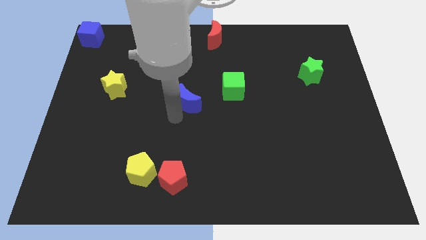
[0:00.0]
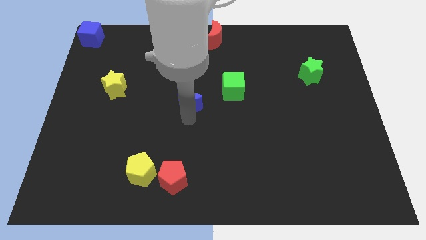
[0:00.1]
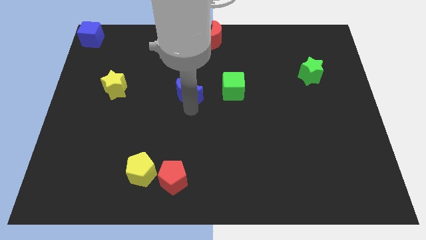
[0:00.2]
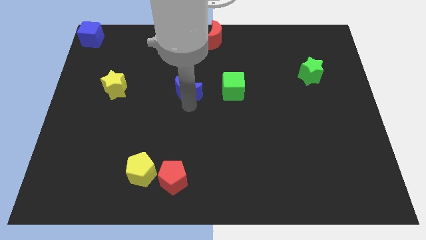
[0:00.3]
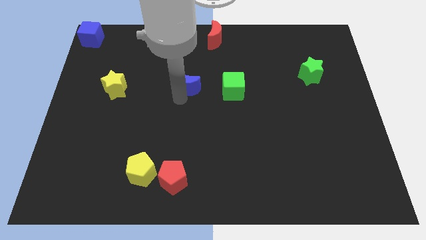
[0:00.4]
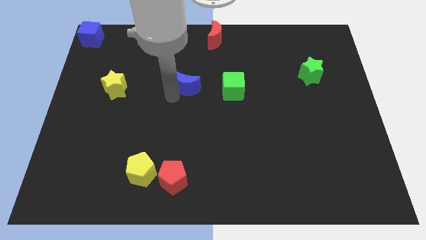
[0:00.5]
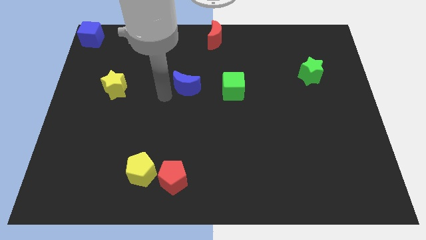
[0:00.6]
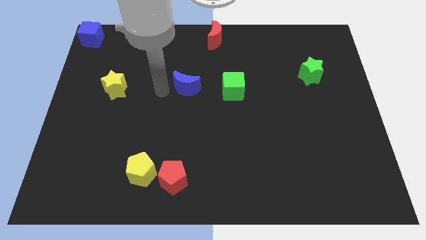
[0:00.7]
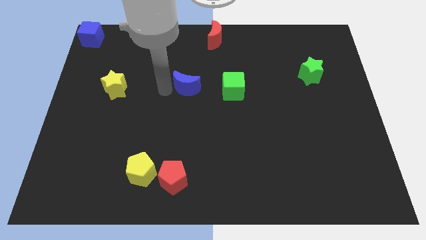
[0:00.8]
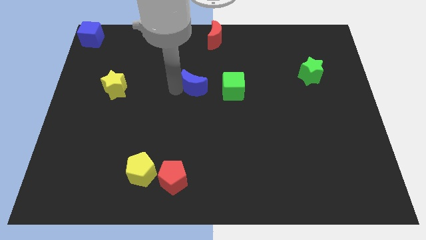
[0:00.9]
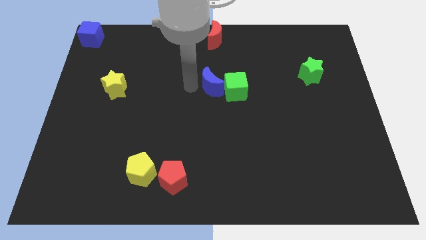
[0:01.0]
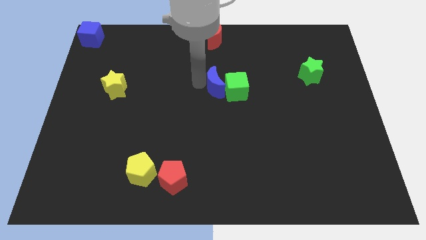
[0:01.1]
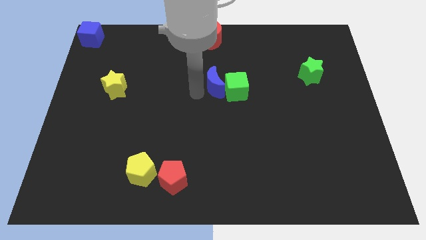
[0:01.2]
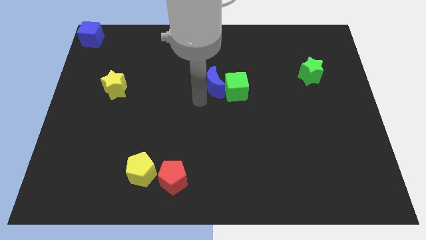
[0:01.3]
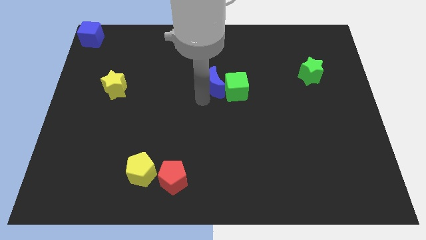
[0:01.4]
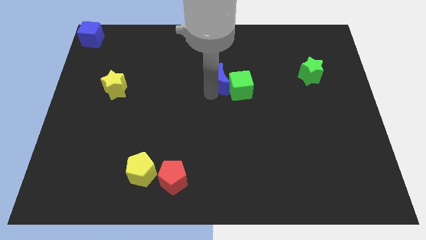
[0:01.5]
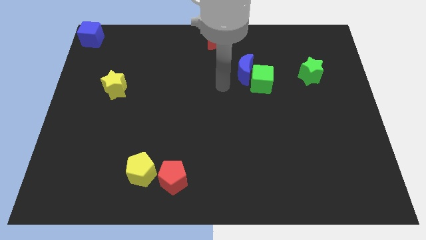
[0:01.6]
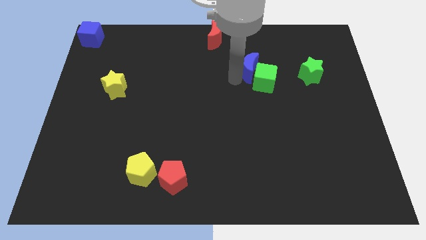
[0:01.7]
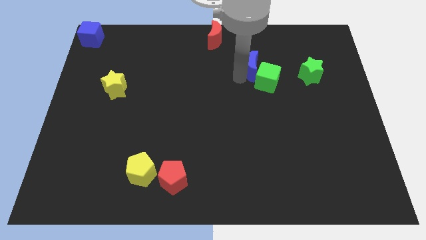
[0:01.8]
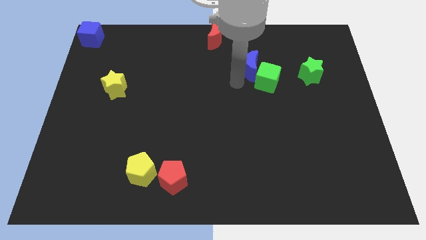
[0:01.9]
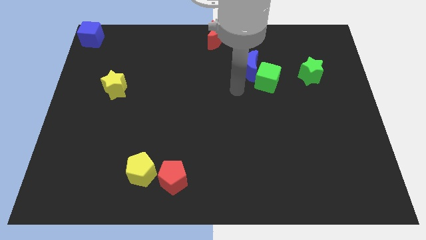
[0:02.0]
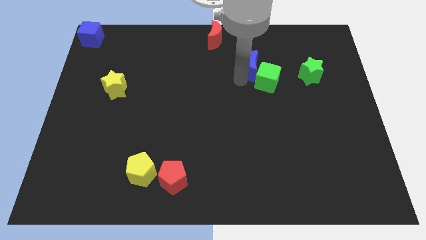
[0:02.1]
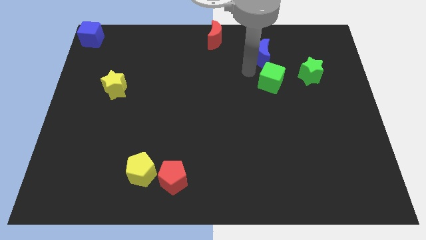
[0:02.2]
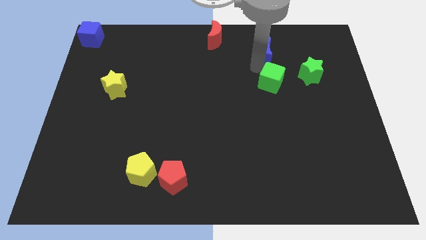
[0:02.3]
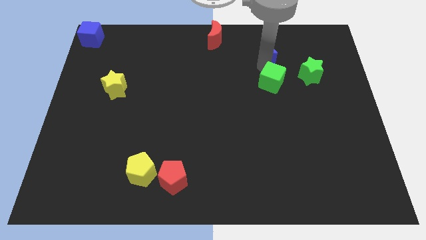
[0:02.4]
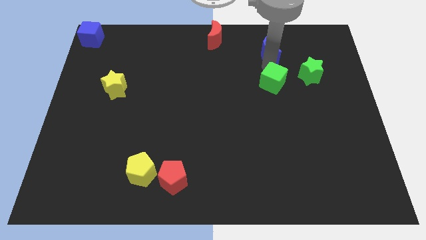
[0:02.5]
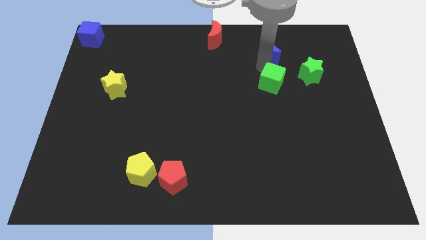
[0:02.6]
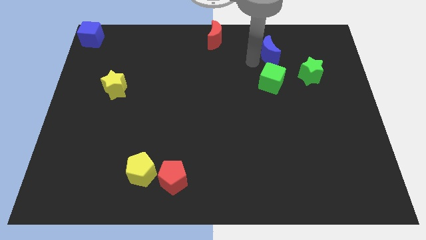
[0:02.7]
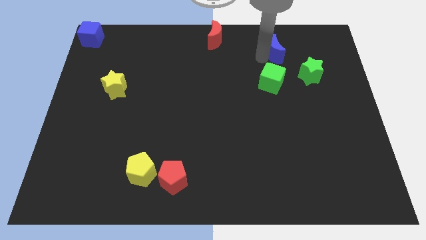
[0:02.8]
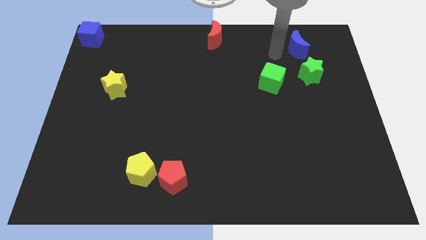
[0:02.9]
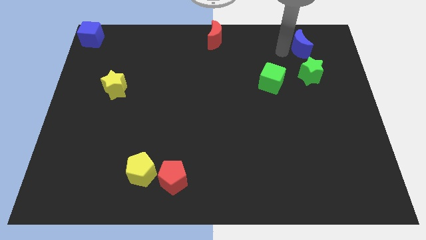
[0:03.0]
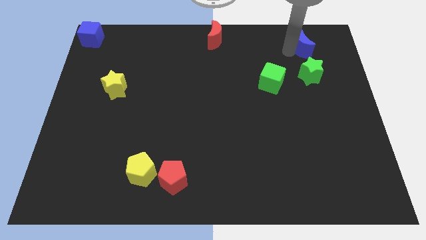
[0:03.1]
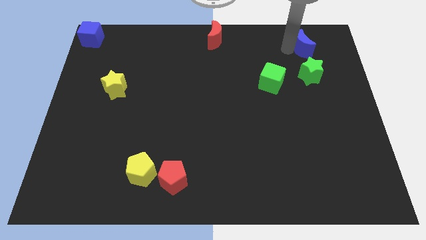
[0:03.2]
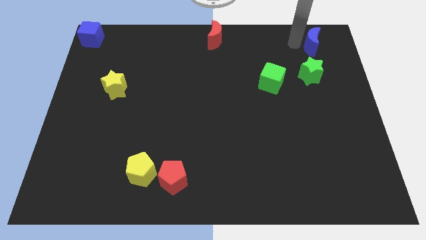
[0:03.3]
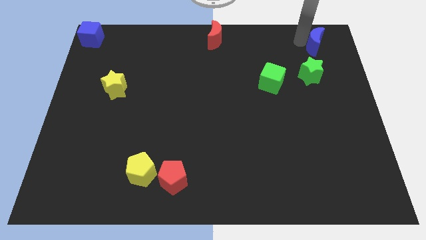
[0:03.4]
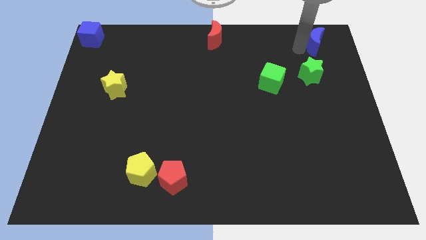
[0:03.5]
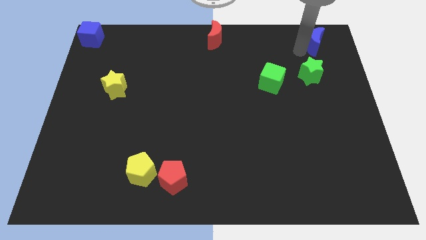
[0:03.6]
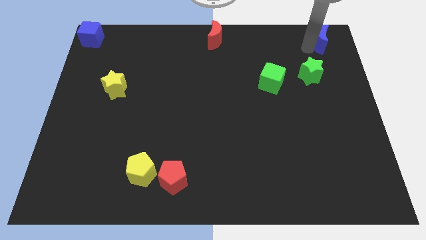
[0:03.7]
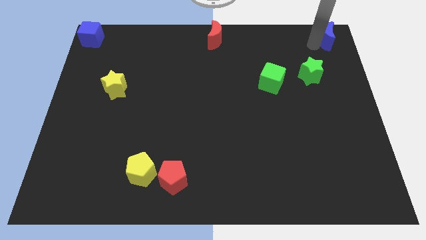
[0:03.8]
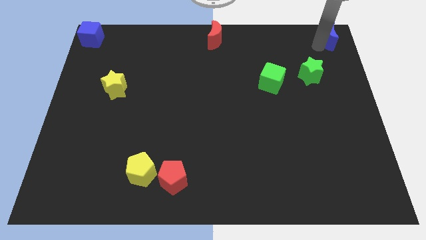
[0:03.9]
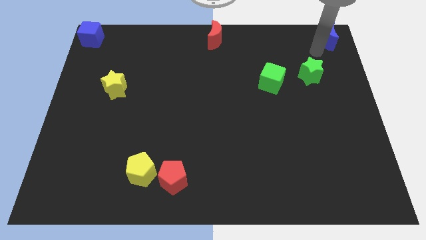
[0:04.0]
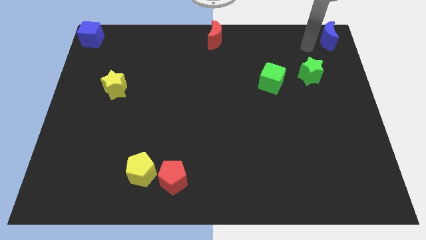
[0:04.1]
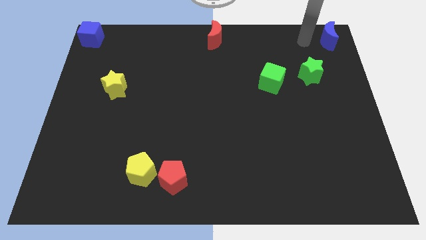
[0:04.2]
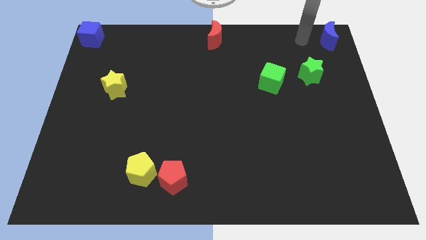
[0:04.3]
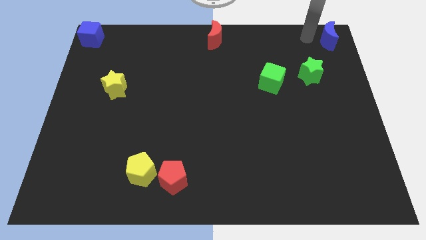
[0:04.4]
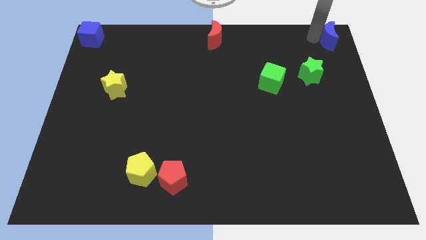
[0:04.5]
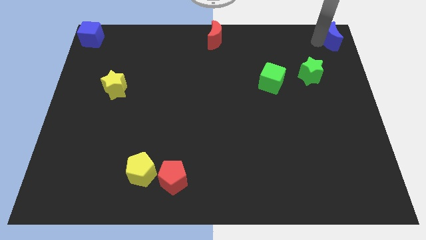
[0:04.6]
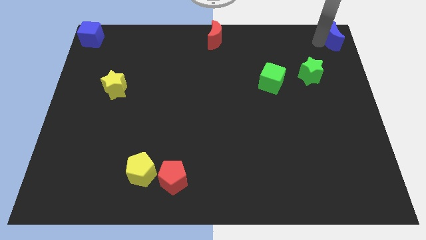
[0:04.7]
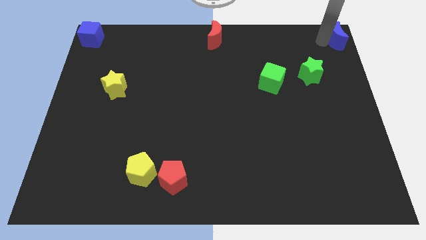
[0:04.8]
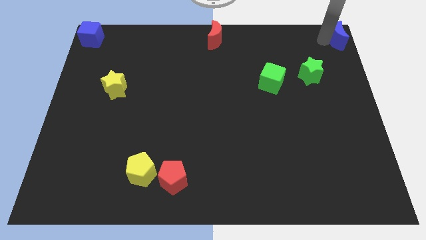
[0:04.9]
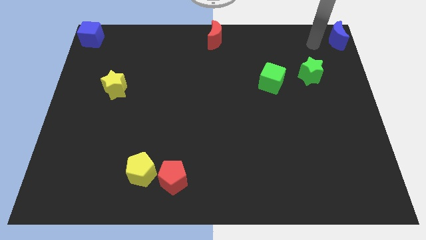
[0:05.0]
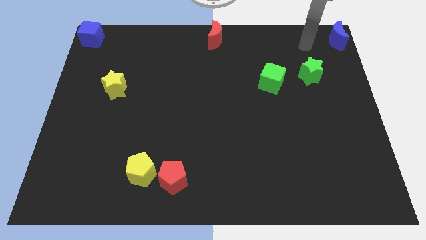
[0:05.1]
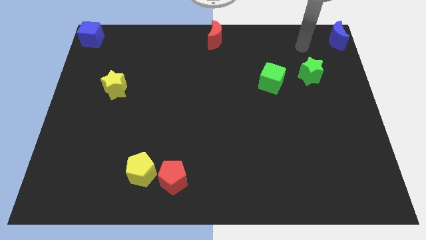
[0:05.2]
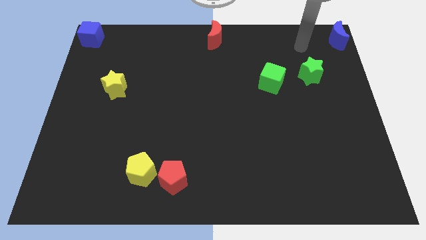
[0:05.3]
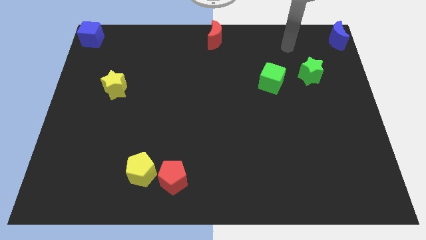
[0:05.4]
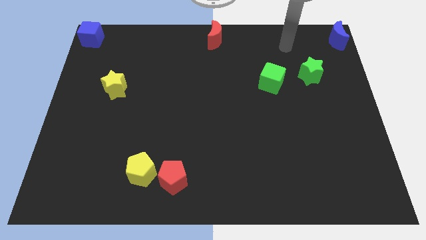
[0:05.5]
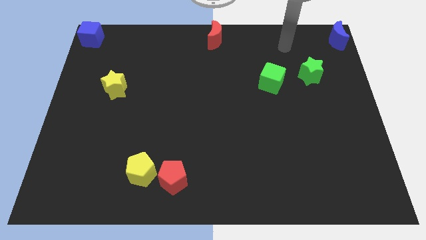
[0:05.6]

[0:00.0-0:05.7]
place the blue moon at the top of the green star

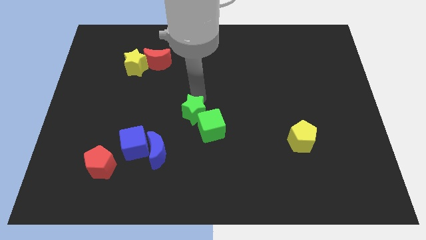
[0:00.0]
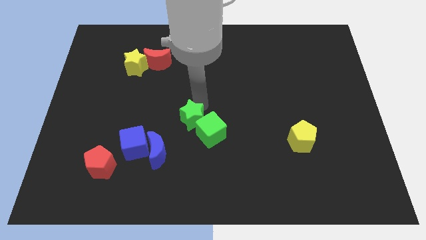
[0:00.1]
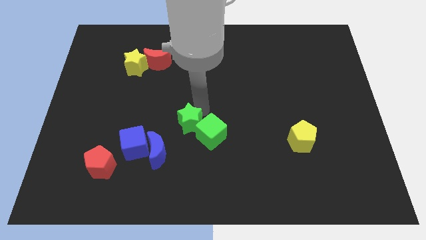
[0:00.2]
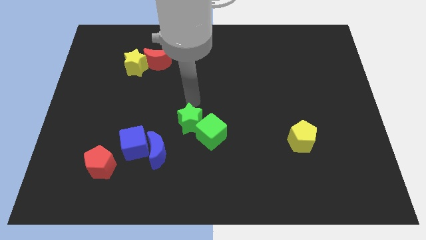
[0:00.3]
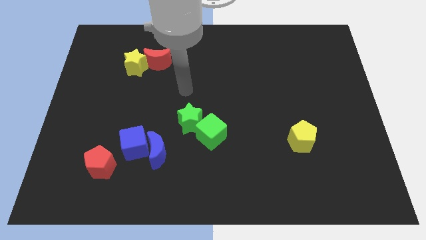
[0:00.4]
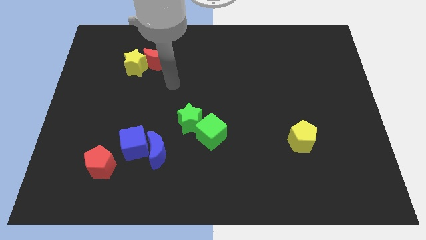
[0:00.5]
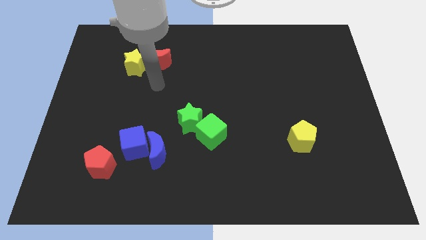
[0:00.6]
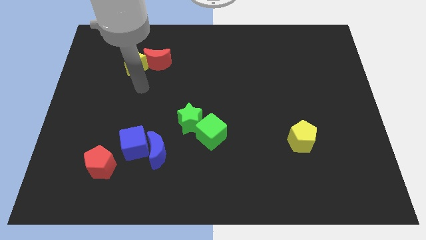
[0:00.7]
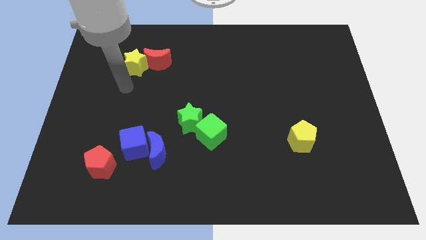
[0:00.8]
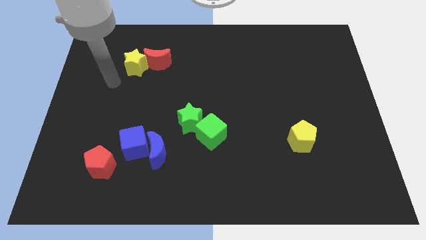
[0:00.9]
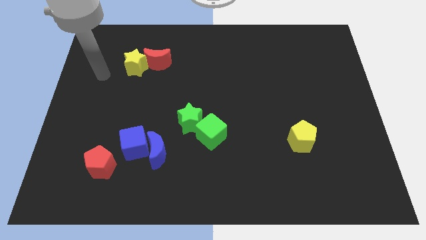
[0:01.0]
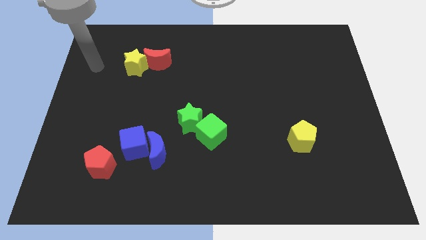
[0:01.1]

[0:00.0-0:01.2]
move the arm away from the green star

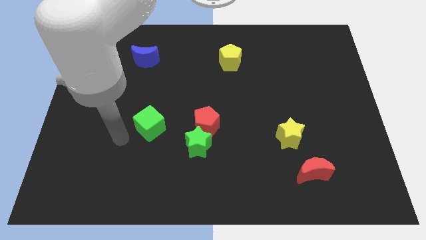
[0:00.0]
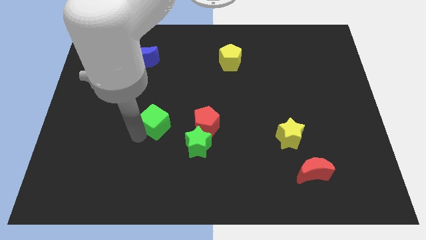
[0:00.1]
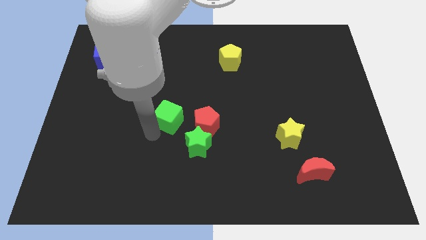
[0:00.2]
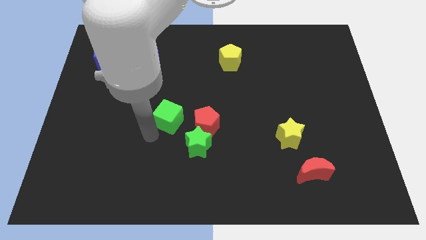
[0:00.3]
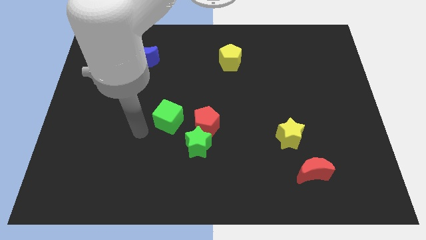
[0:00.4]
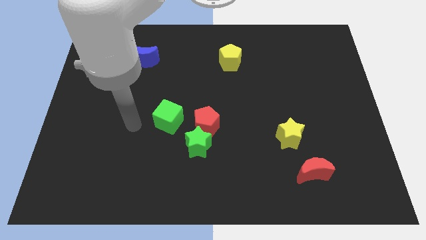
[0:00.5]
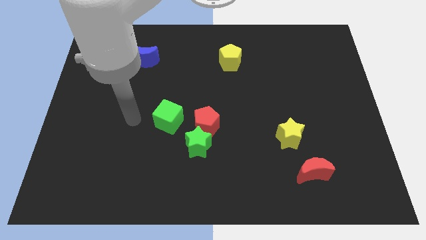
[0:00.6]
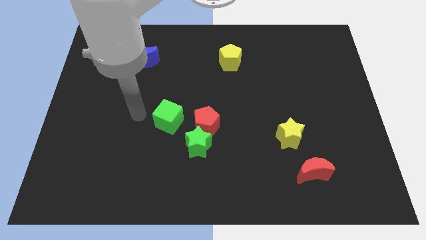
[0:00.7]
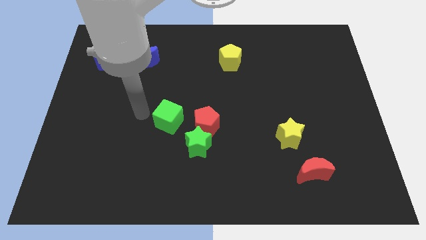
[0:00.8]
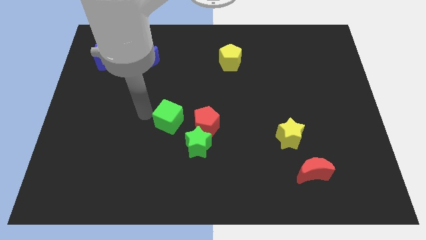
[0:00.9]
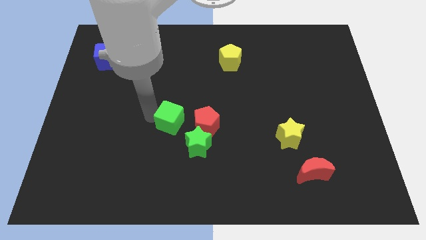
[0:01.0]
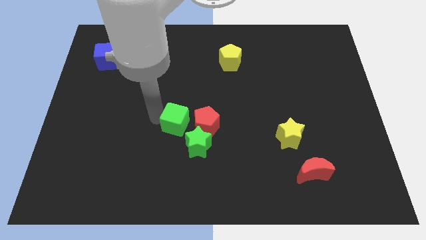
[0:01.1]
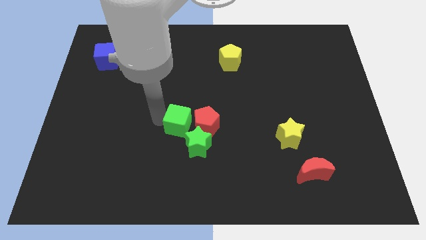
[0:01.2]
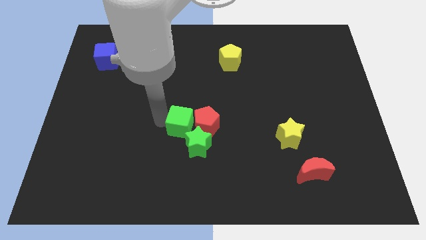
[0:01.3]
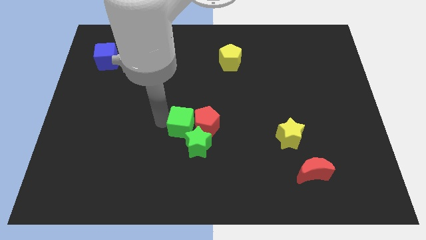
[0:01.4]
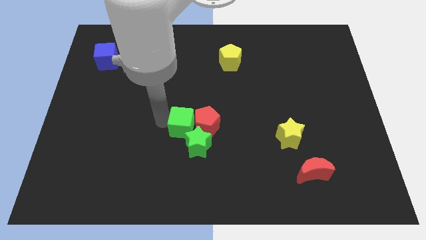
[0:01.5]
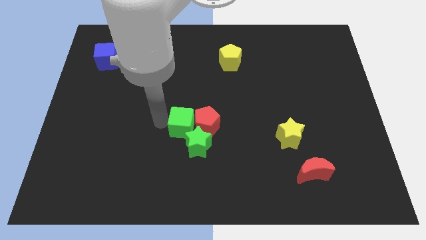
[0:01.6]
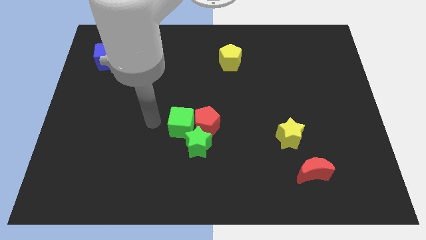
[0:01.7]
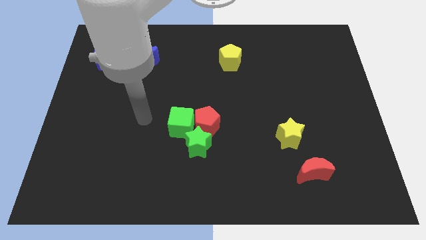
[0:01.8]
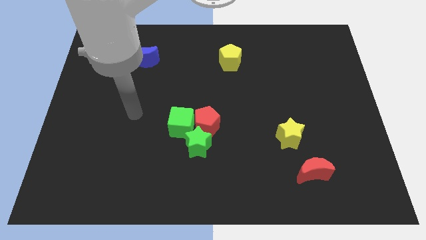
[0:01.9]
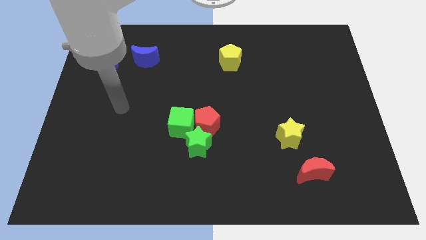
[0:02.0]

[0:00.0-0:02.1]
put the green cube close to the left of the red pentagon

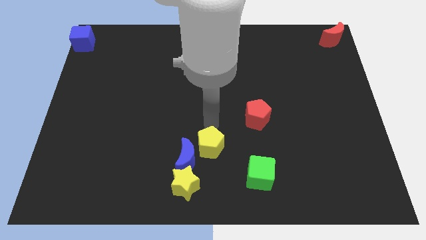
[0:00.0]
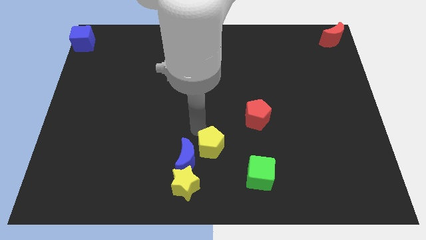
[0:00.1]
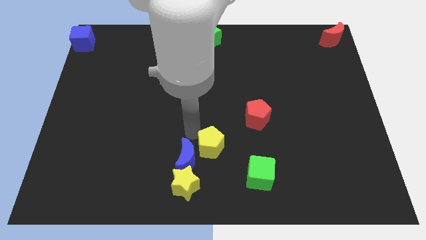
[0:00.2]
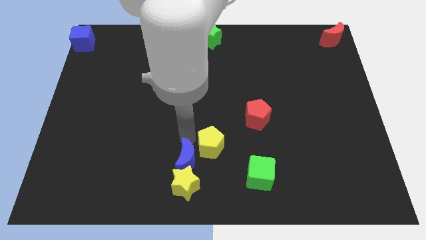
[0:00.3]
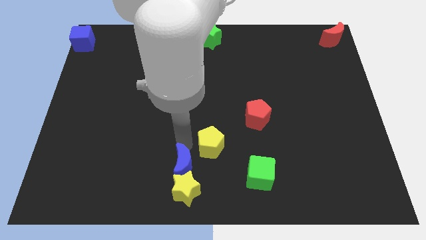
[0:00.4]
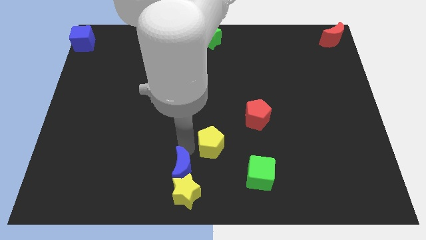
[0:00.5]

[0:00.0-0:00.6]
move the blue crescent along with the yellow star slightly to the bottom
